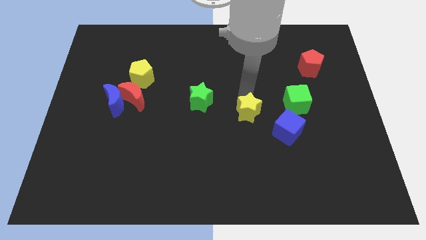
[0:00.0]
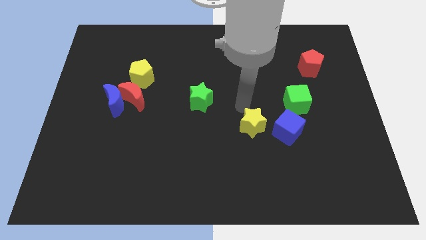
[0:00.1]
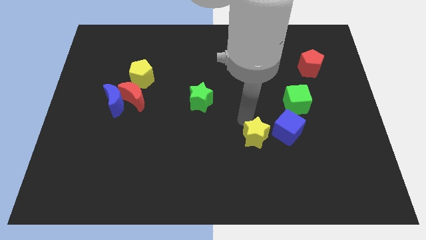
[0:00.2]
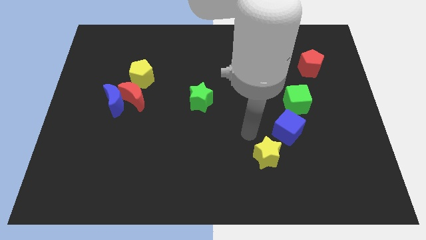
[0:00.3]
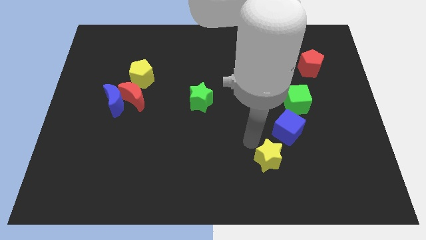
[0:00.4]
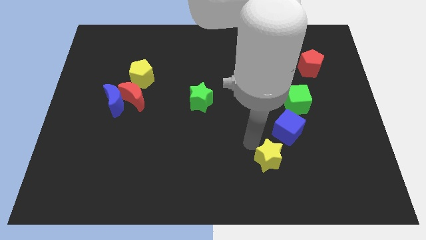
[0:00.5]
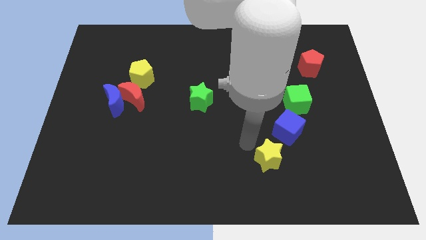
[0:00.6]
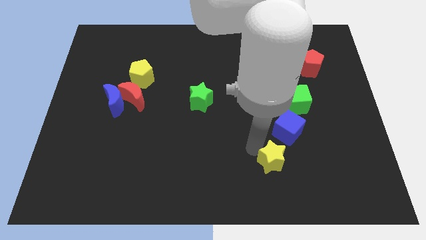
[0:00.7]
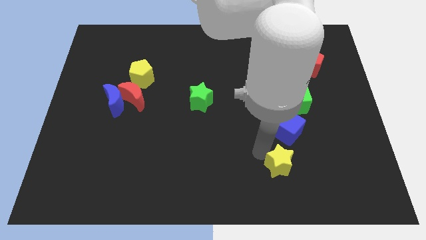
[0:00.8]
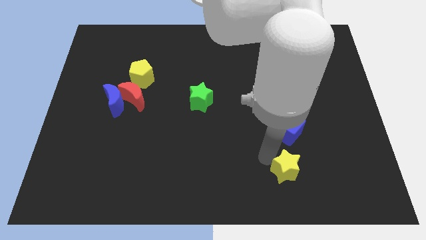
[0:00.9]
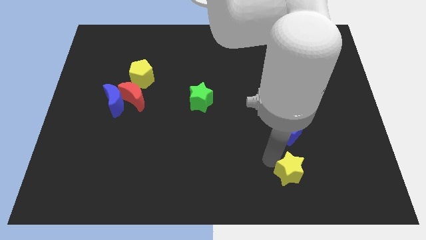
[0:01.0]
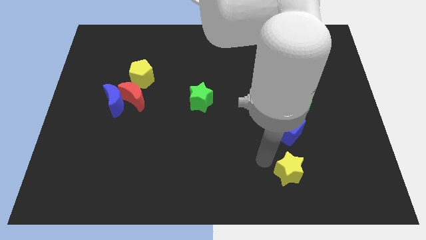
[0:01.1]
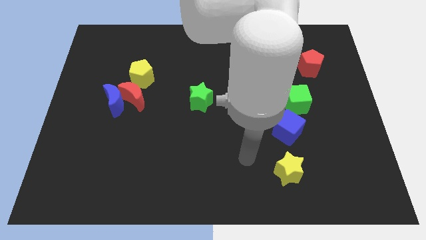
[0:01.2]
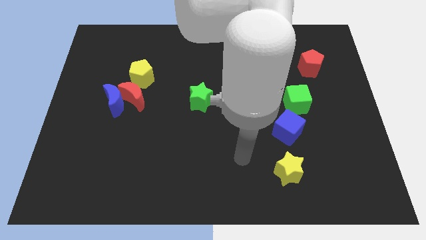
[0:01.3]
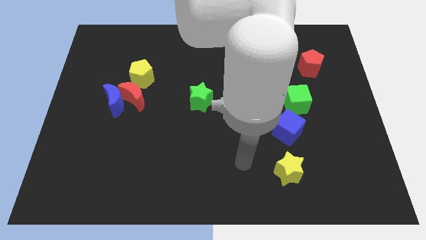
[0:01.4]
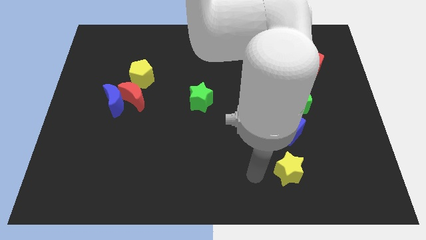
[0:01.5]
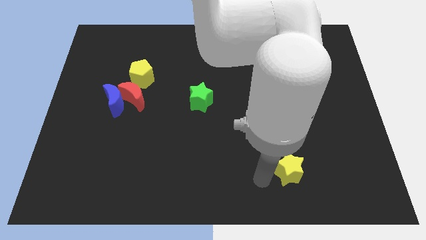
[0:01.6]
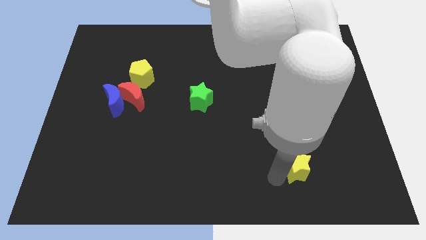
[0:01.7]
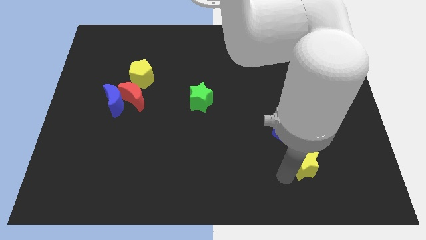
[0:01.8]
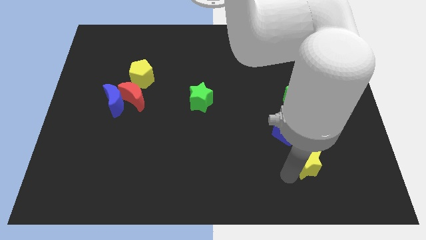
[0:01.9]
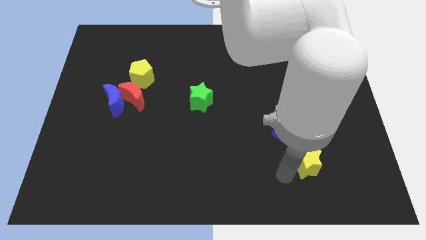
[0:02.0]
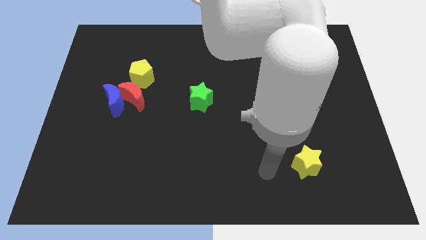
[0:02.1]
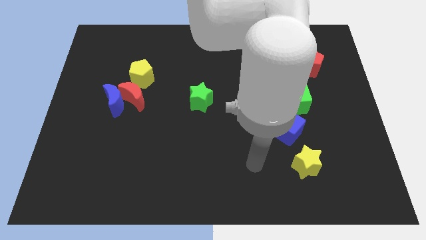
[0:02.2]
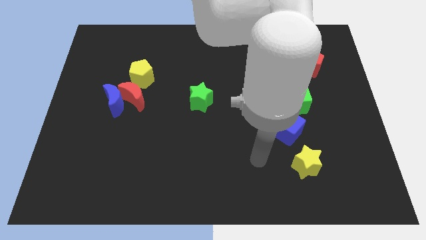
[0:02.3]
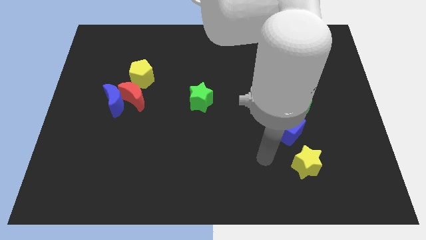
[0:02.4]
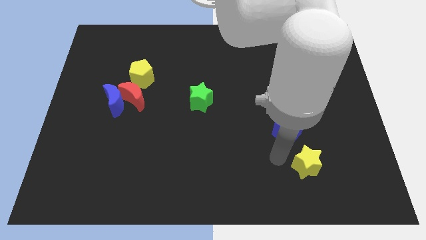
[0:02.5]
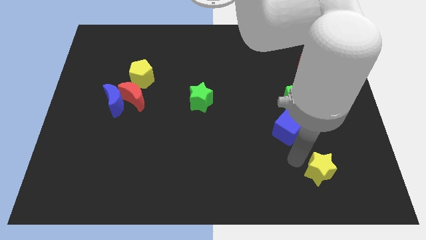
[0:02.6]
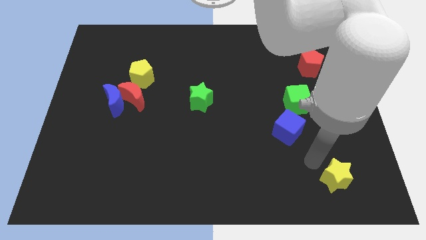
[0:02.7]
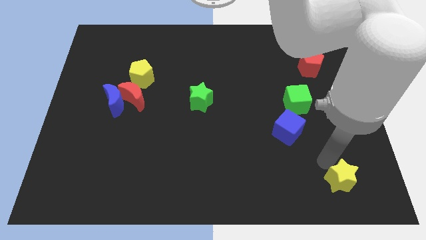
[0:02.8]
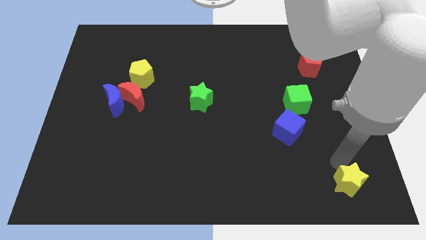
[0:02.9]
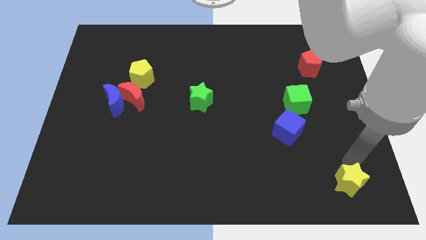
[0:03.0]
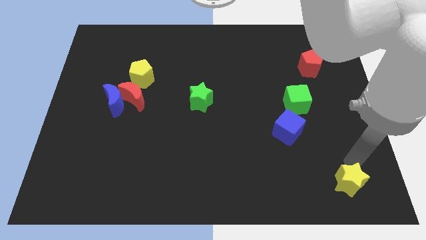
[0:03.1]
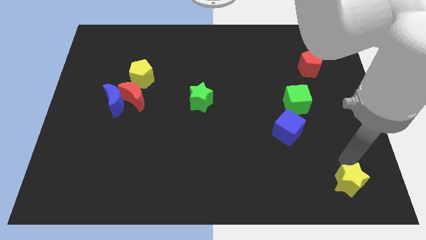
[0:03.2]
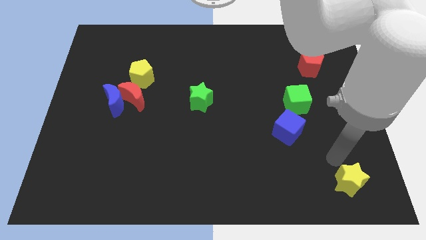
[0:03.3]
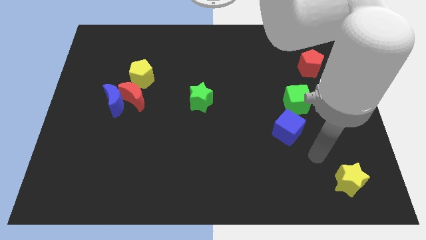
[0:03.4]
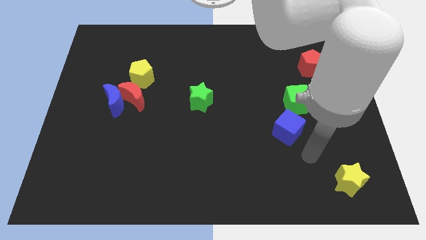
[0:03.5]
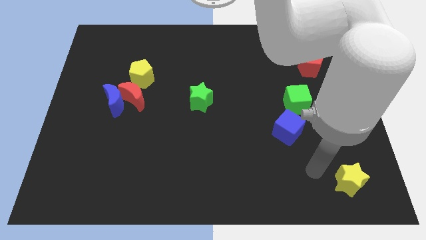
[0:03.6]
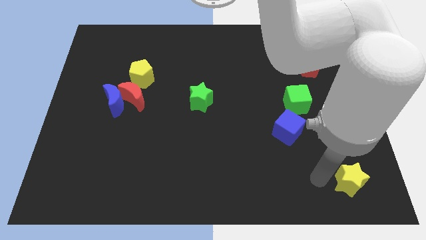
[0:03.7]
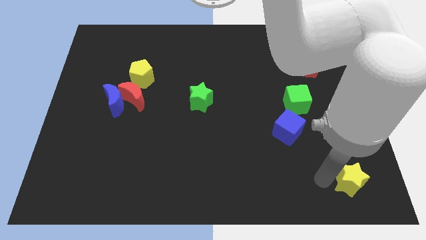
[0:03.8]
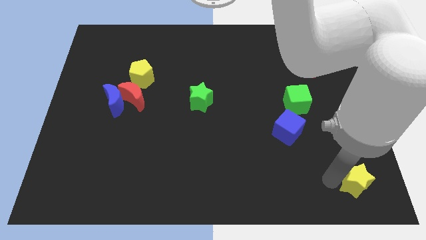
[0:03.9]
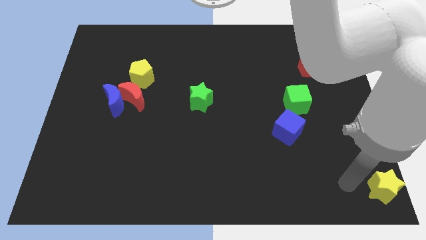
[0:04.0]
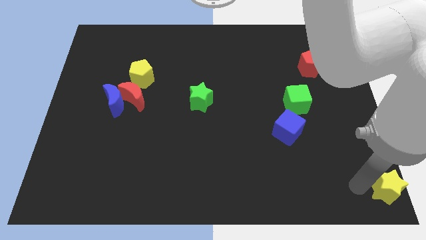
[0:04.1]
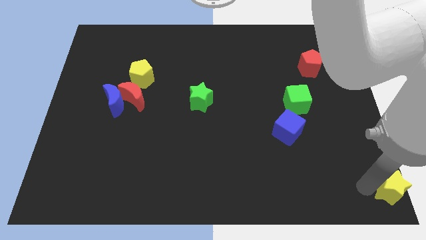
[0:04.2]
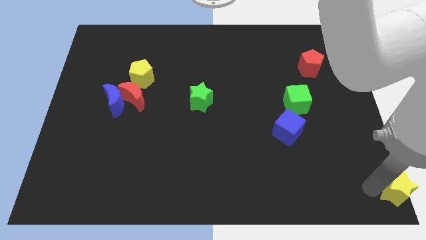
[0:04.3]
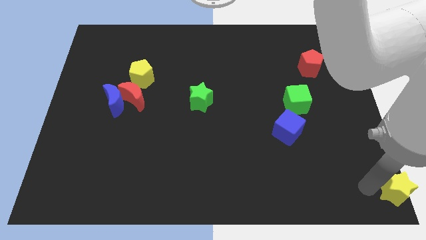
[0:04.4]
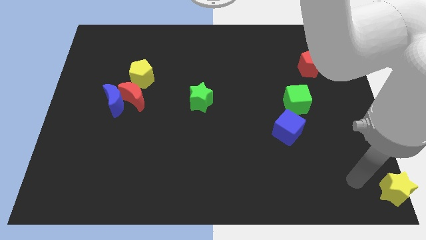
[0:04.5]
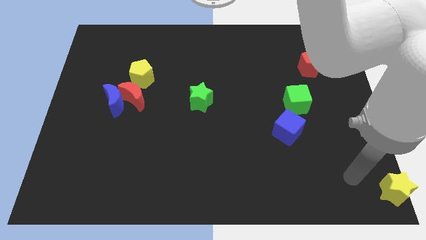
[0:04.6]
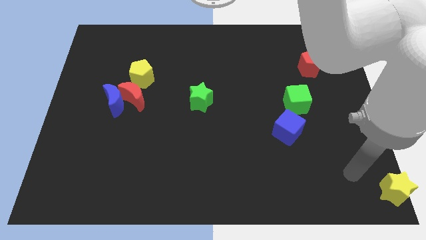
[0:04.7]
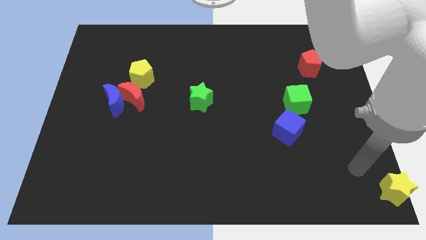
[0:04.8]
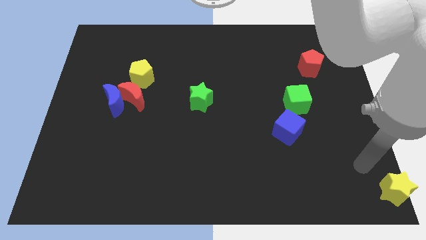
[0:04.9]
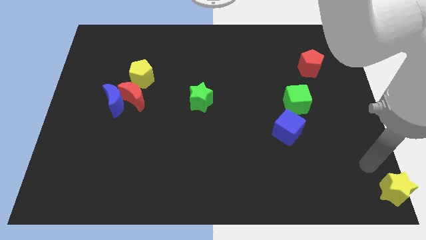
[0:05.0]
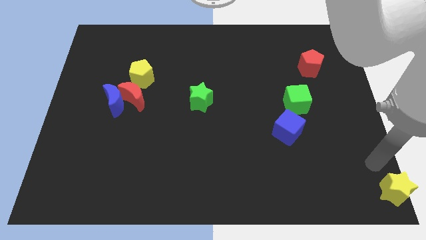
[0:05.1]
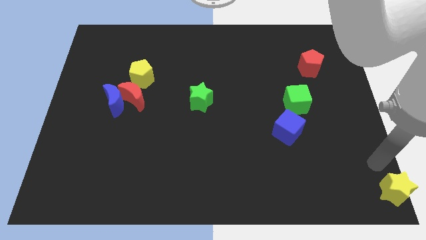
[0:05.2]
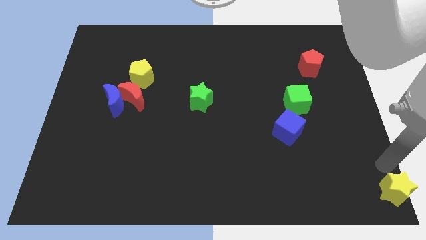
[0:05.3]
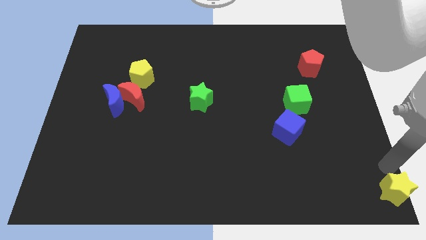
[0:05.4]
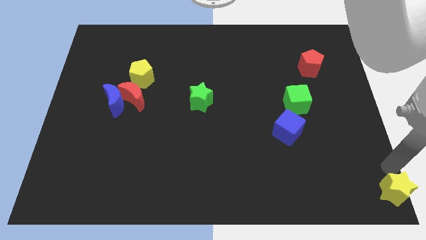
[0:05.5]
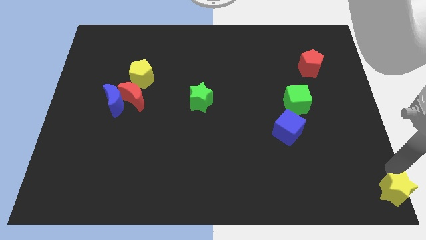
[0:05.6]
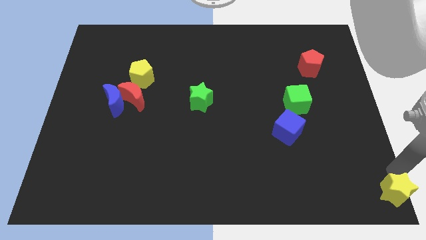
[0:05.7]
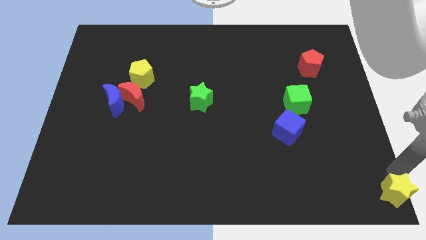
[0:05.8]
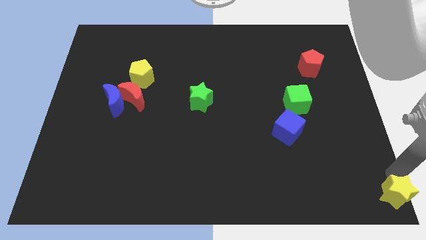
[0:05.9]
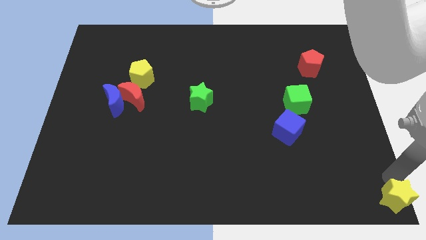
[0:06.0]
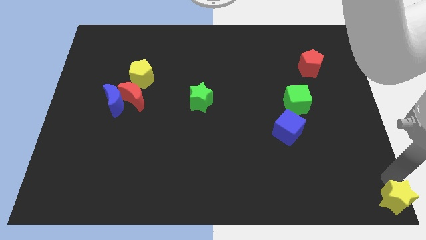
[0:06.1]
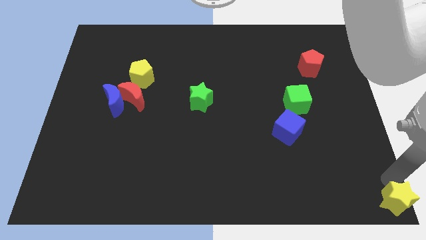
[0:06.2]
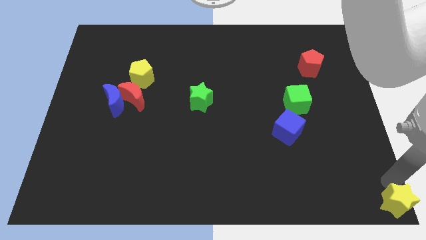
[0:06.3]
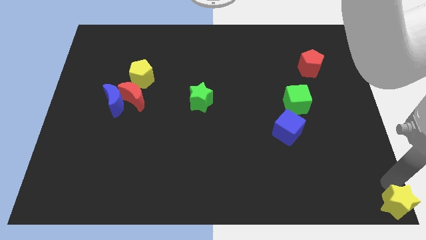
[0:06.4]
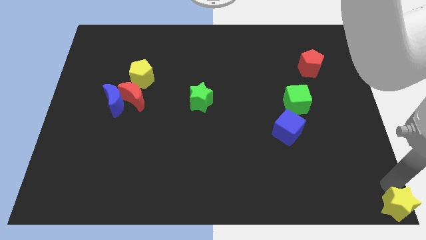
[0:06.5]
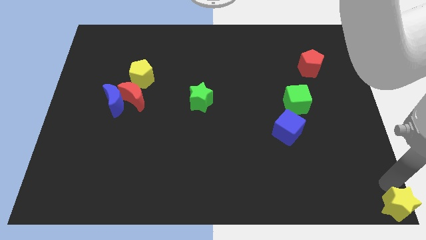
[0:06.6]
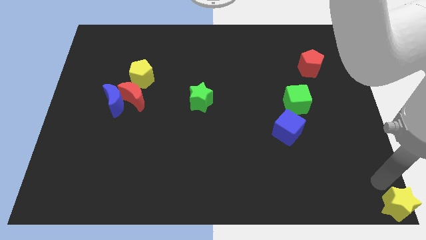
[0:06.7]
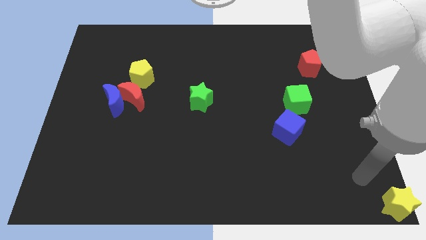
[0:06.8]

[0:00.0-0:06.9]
move the yellow star to the bottom right of the board

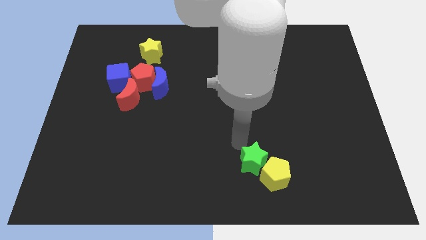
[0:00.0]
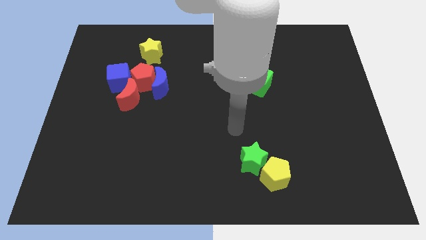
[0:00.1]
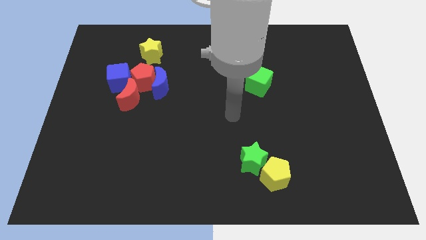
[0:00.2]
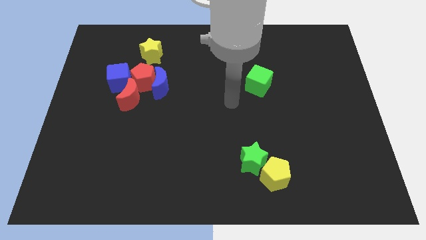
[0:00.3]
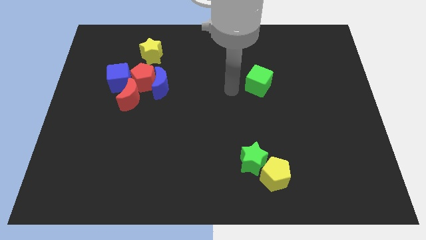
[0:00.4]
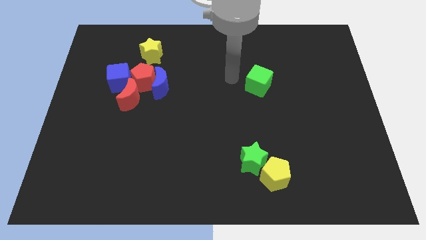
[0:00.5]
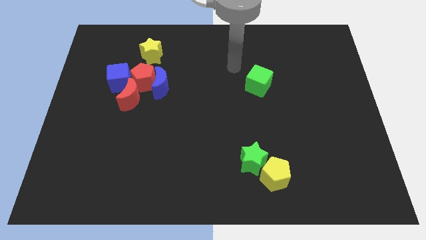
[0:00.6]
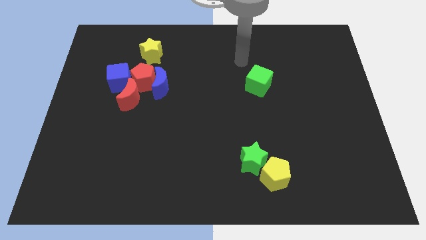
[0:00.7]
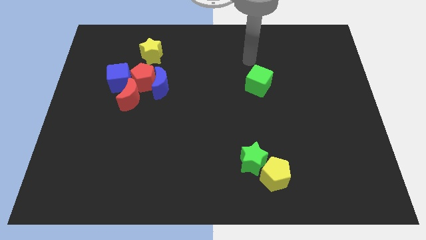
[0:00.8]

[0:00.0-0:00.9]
point your arm at the top of the green cube

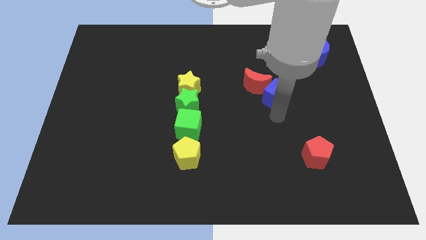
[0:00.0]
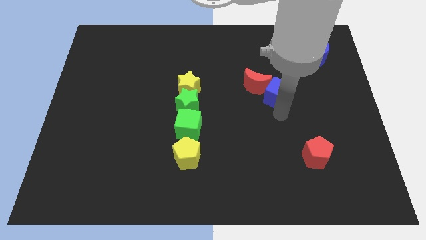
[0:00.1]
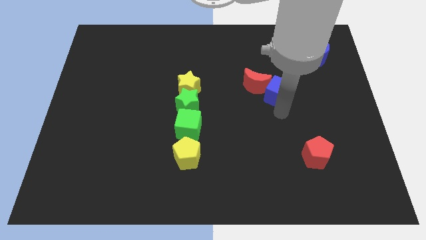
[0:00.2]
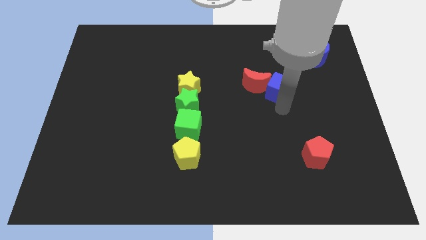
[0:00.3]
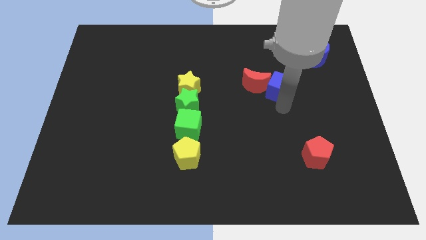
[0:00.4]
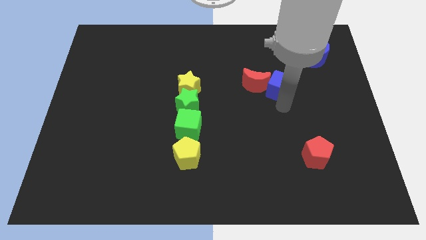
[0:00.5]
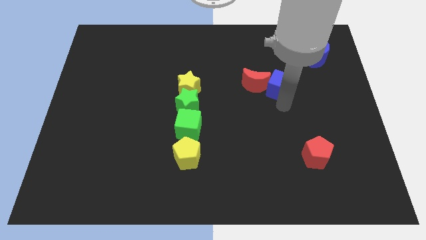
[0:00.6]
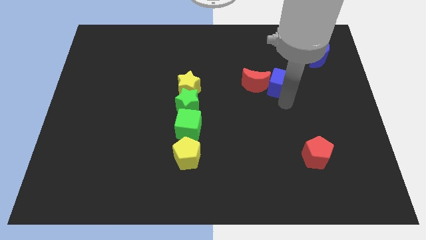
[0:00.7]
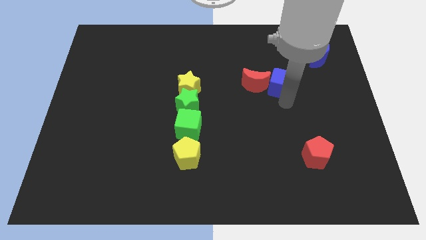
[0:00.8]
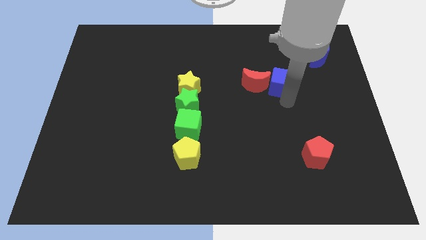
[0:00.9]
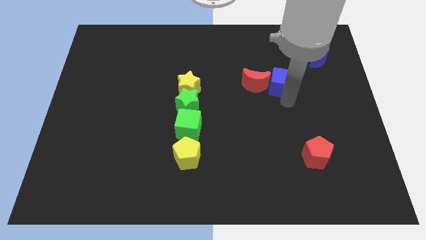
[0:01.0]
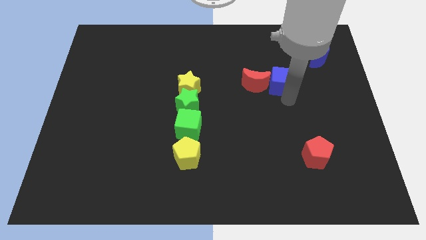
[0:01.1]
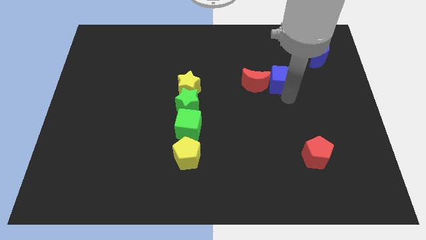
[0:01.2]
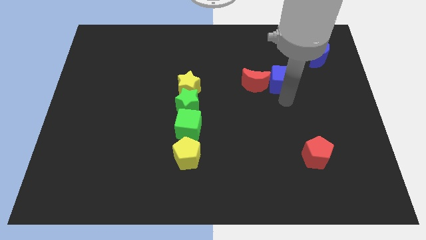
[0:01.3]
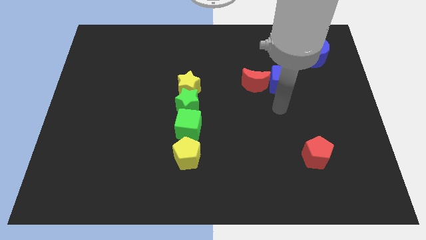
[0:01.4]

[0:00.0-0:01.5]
move blue cube left beside red moon
